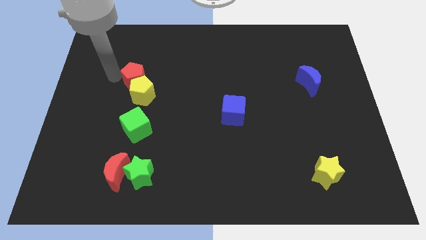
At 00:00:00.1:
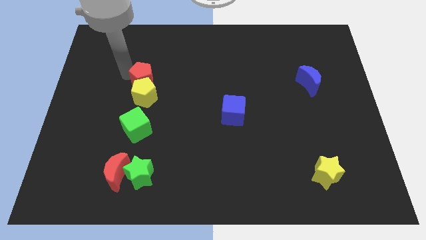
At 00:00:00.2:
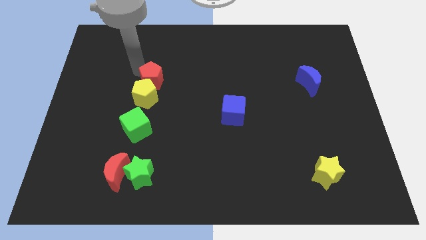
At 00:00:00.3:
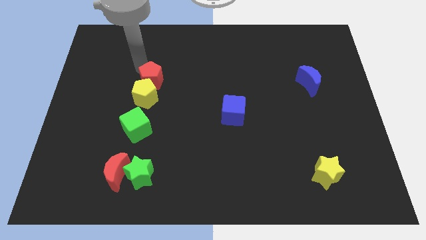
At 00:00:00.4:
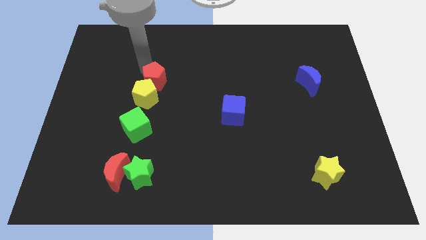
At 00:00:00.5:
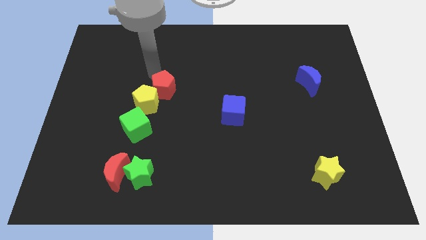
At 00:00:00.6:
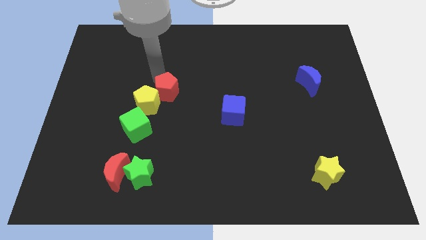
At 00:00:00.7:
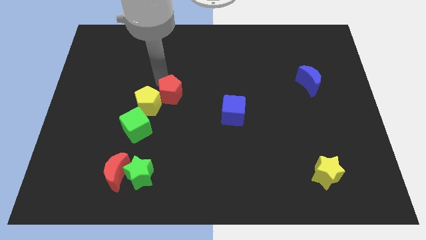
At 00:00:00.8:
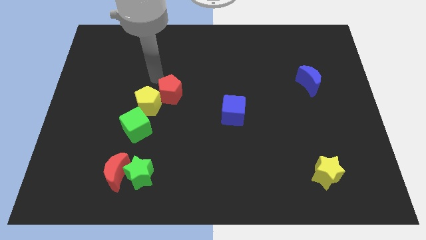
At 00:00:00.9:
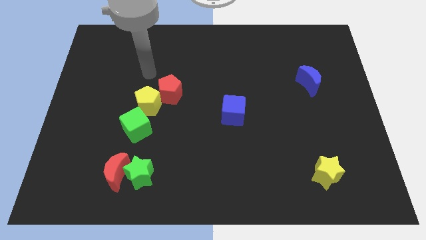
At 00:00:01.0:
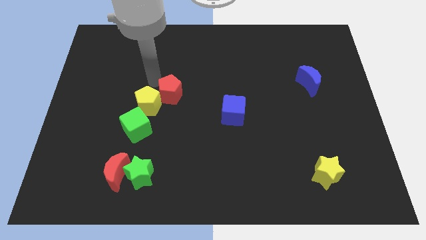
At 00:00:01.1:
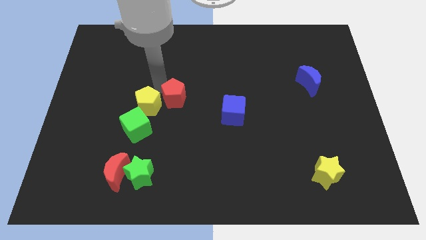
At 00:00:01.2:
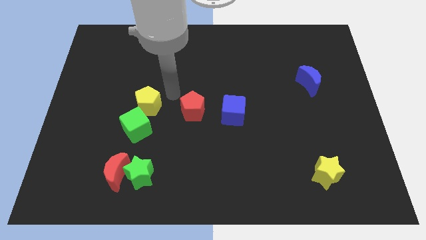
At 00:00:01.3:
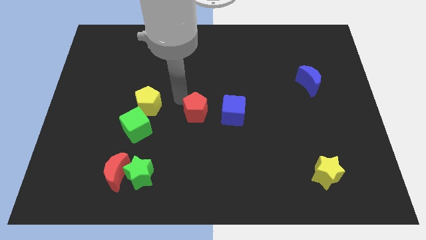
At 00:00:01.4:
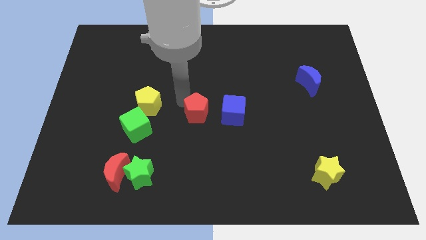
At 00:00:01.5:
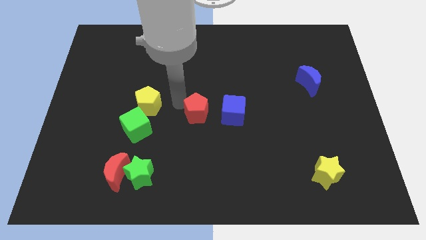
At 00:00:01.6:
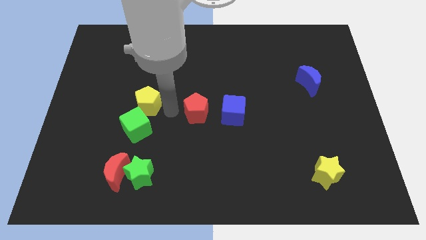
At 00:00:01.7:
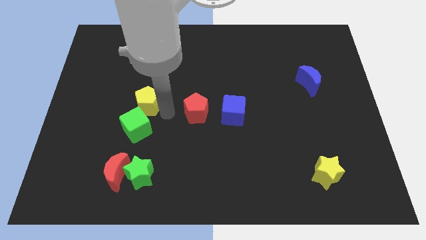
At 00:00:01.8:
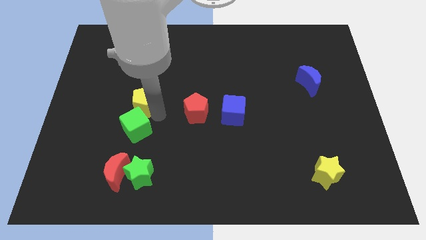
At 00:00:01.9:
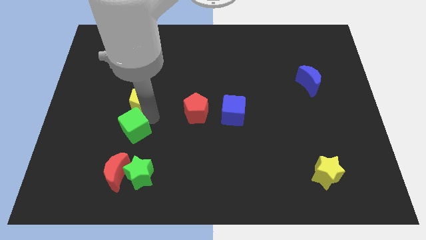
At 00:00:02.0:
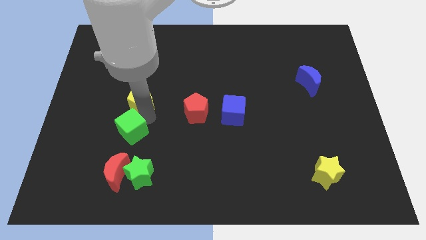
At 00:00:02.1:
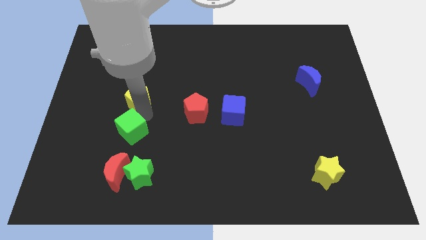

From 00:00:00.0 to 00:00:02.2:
push the red pentagon to the left of the blue cube

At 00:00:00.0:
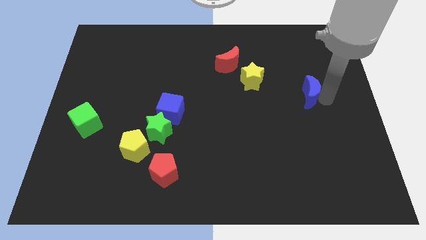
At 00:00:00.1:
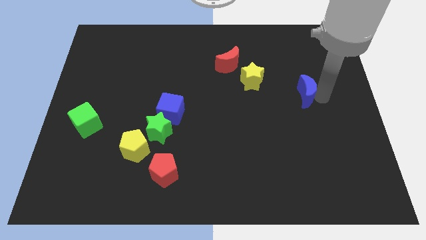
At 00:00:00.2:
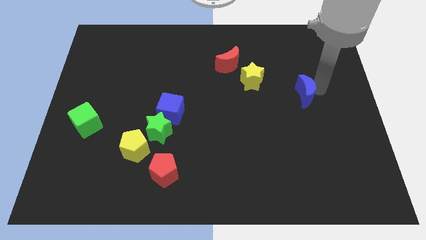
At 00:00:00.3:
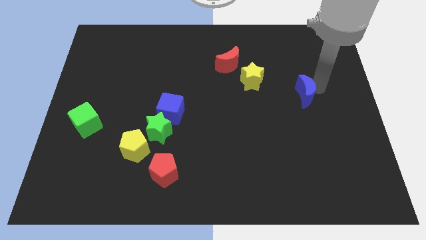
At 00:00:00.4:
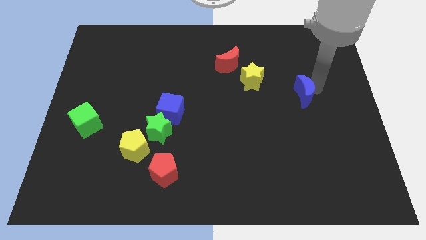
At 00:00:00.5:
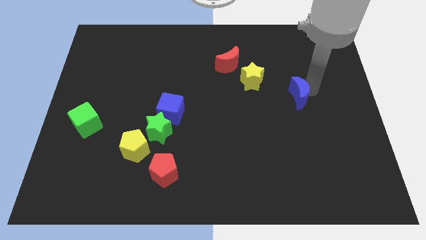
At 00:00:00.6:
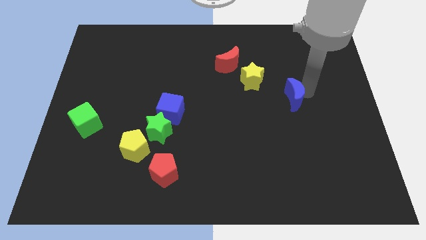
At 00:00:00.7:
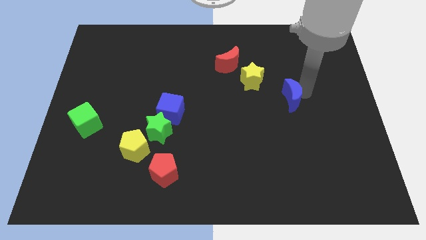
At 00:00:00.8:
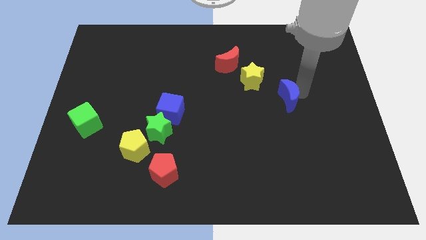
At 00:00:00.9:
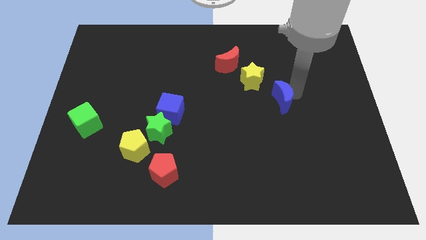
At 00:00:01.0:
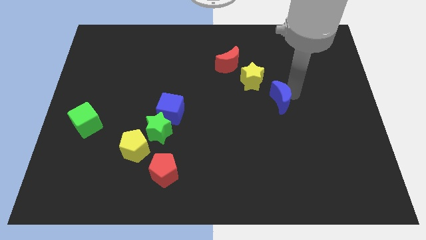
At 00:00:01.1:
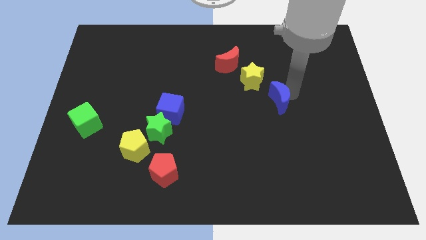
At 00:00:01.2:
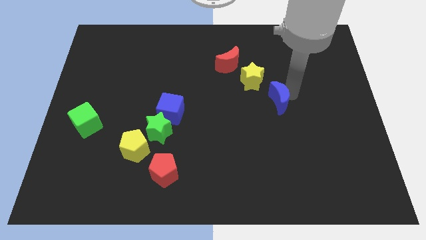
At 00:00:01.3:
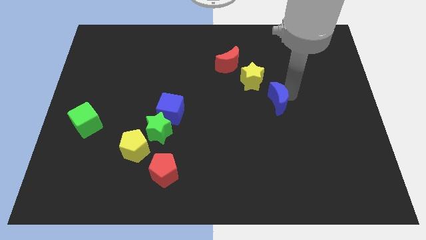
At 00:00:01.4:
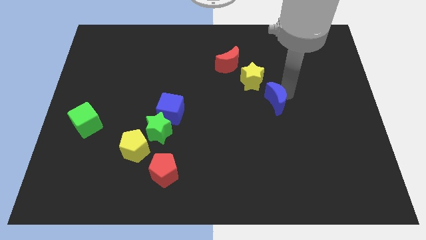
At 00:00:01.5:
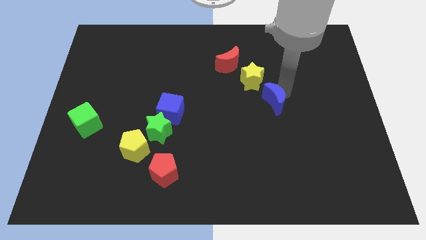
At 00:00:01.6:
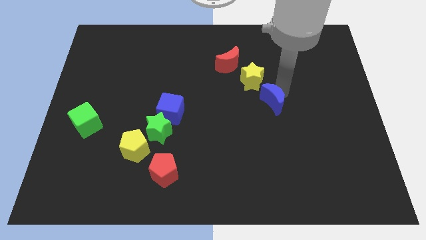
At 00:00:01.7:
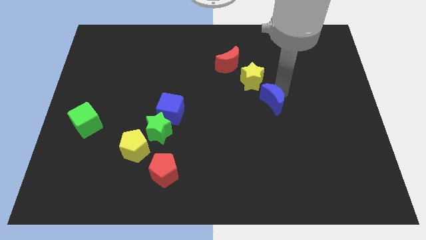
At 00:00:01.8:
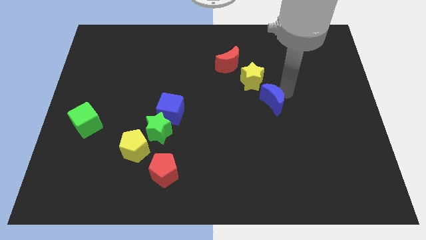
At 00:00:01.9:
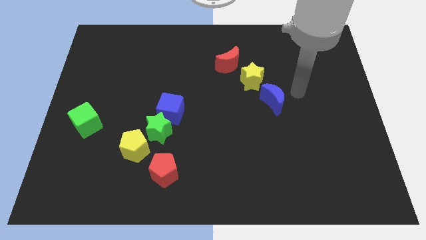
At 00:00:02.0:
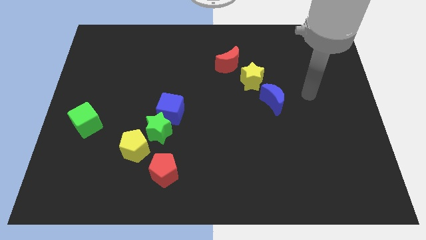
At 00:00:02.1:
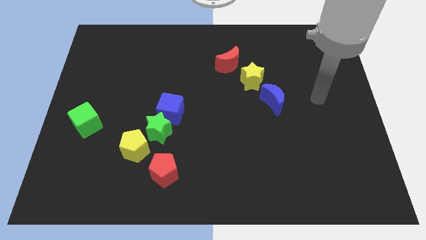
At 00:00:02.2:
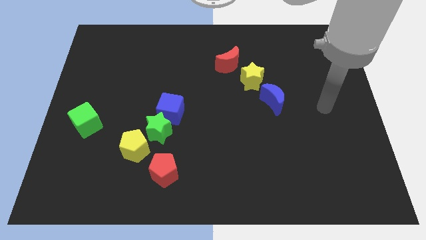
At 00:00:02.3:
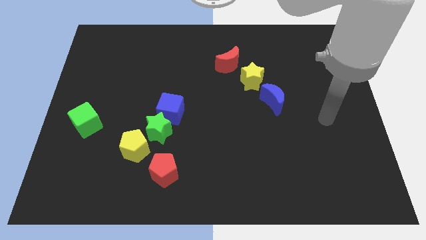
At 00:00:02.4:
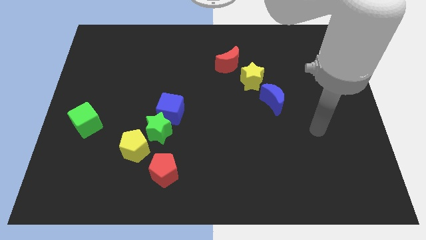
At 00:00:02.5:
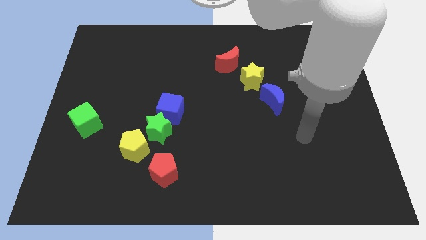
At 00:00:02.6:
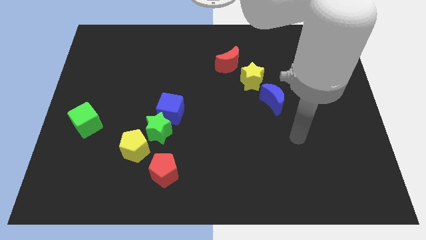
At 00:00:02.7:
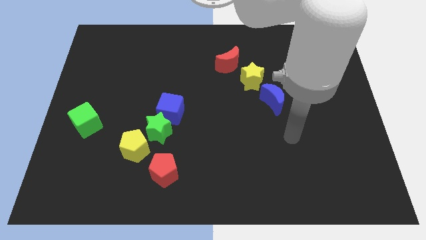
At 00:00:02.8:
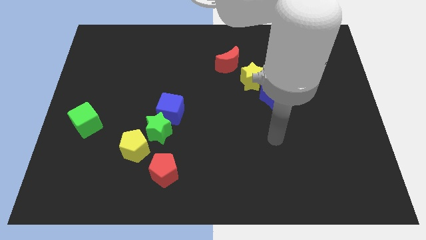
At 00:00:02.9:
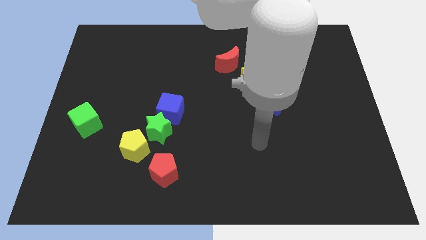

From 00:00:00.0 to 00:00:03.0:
put blue moon diagonally right at the bottom of yellow star

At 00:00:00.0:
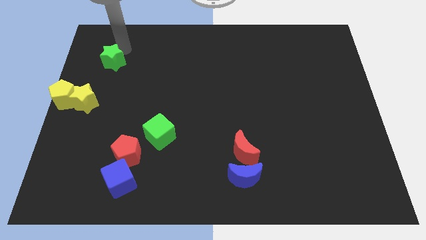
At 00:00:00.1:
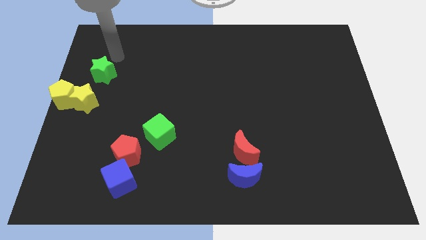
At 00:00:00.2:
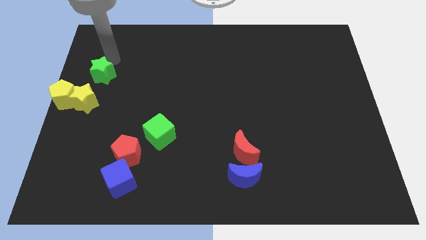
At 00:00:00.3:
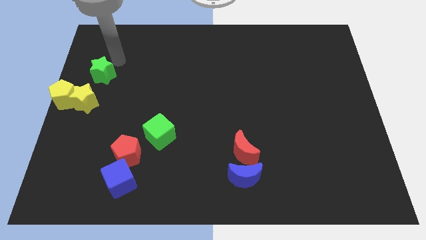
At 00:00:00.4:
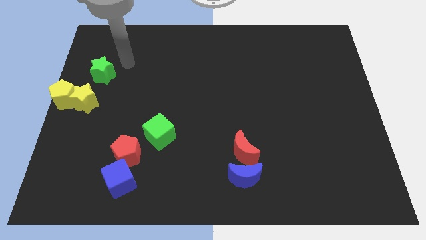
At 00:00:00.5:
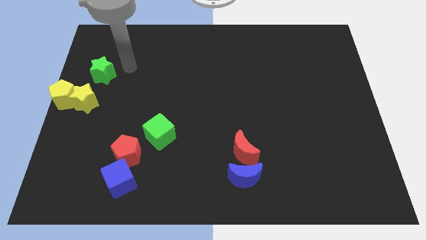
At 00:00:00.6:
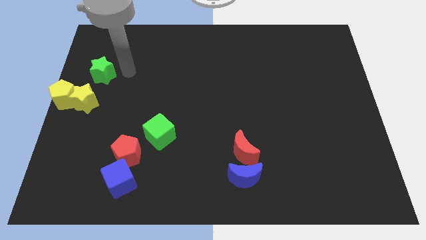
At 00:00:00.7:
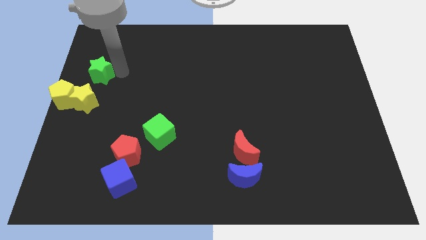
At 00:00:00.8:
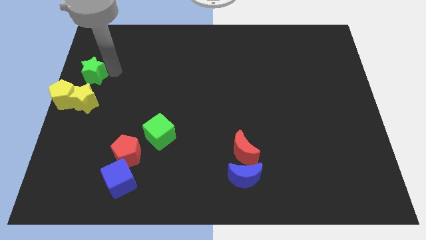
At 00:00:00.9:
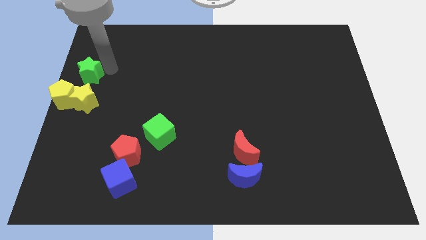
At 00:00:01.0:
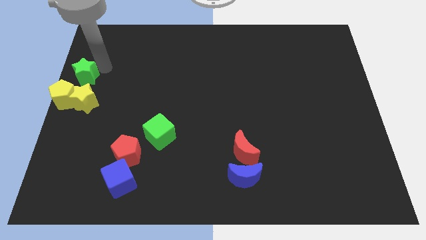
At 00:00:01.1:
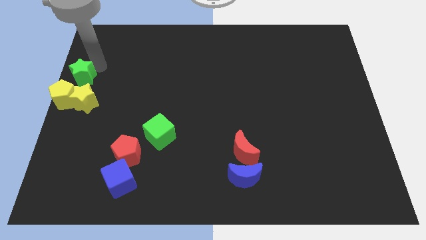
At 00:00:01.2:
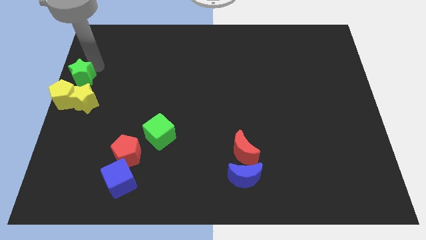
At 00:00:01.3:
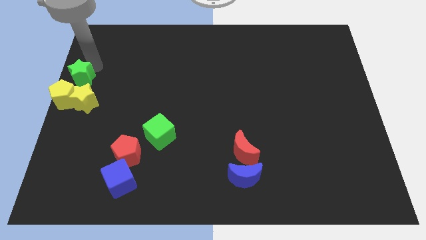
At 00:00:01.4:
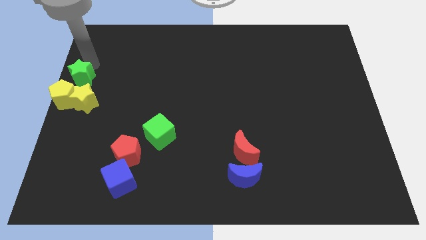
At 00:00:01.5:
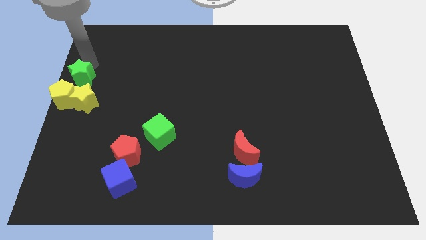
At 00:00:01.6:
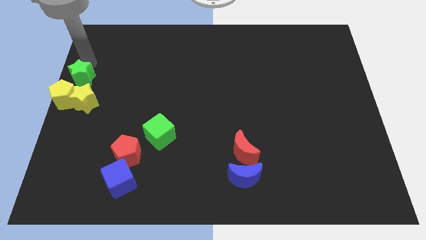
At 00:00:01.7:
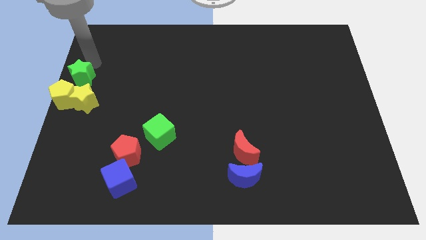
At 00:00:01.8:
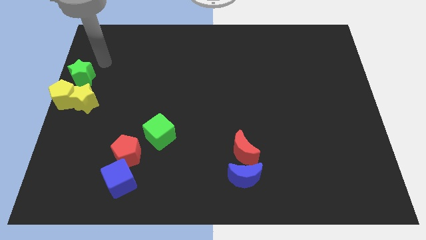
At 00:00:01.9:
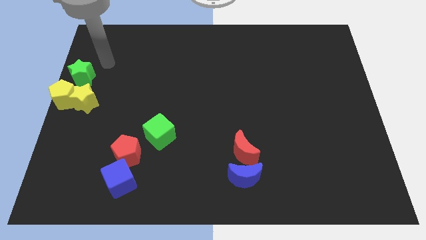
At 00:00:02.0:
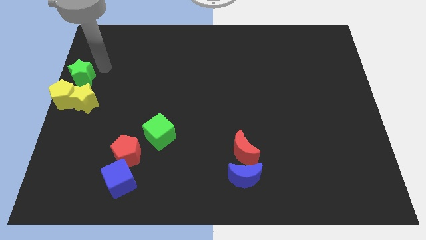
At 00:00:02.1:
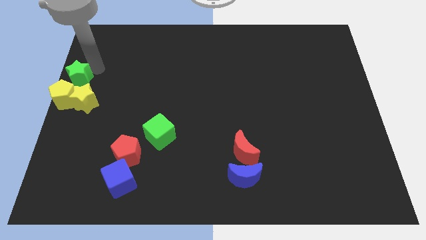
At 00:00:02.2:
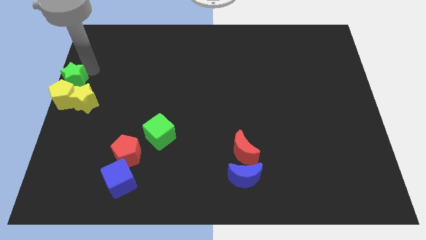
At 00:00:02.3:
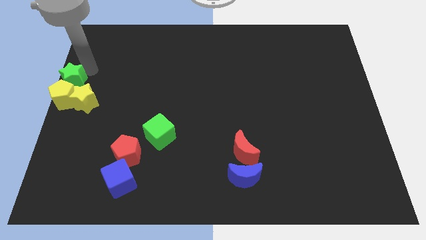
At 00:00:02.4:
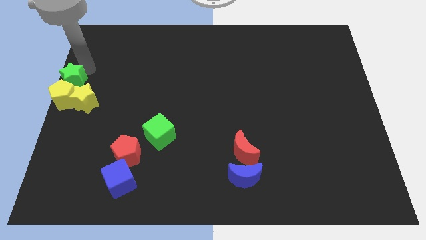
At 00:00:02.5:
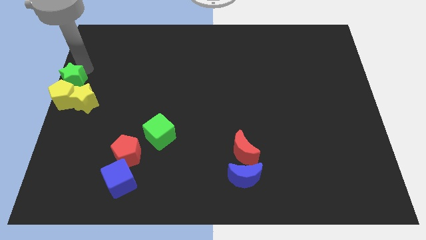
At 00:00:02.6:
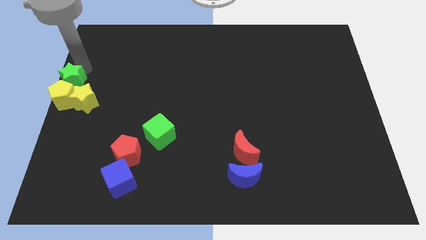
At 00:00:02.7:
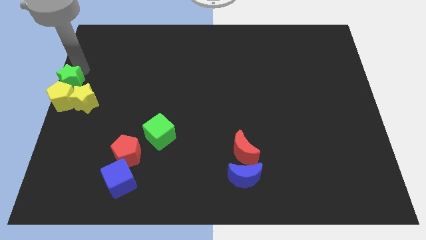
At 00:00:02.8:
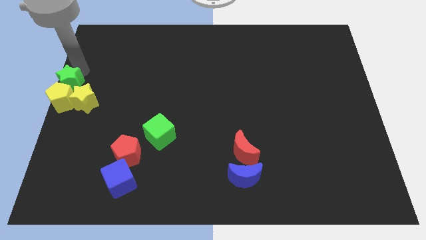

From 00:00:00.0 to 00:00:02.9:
push green star into yellow pentagon

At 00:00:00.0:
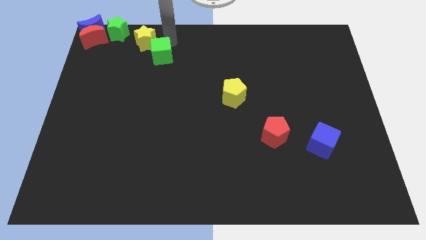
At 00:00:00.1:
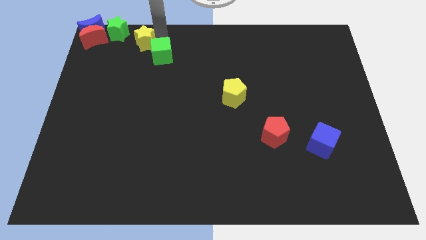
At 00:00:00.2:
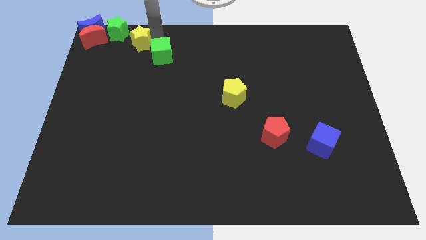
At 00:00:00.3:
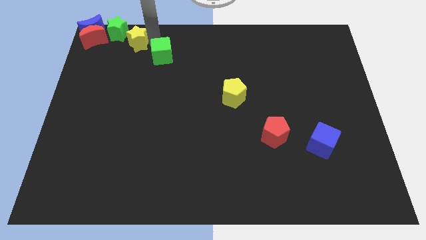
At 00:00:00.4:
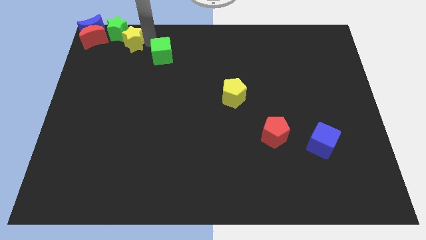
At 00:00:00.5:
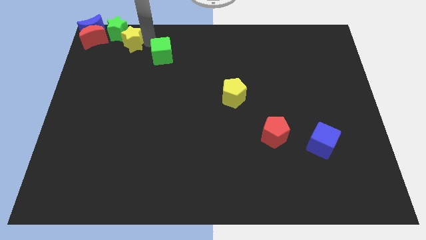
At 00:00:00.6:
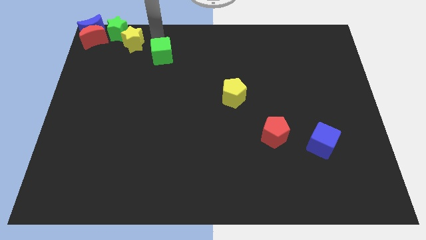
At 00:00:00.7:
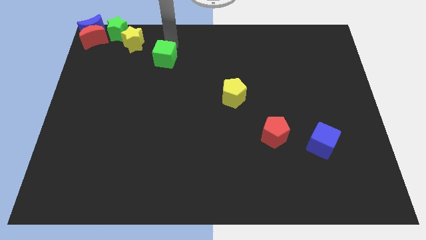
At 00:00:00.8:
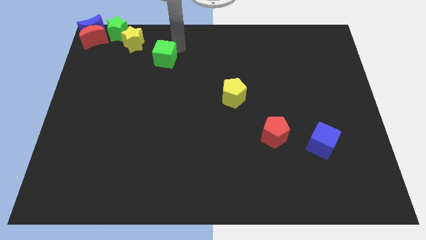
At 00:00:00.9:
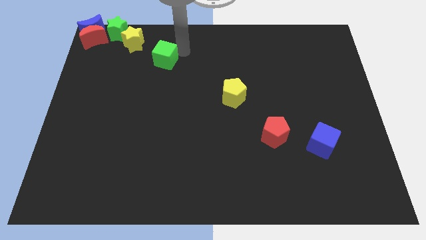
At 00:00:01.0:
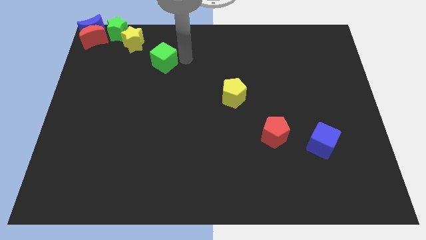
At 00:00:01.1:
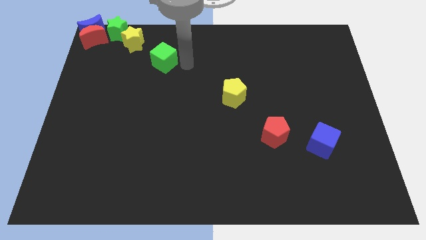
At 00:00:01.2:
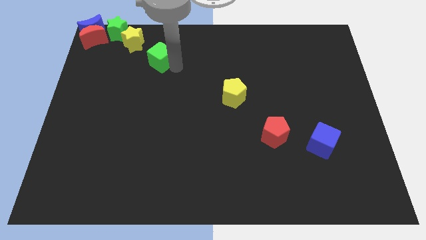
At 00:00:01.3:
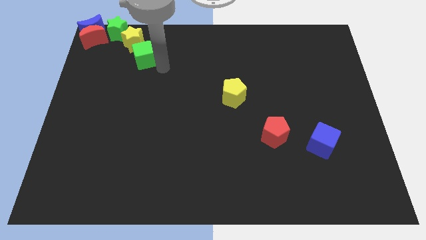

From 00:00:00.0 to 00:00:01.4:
put the green cube to the bottom right of the yellow star
